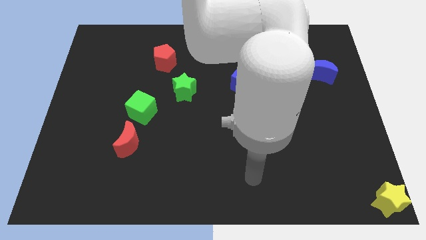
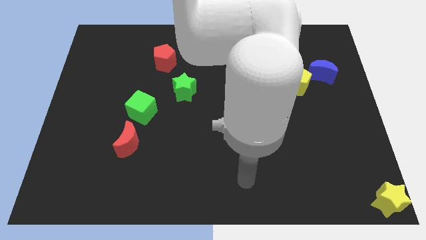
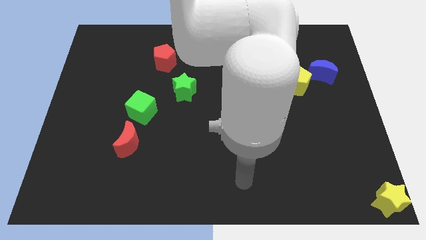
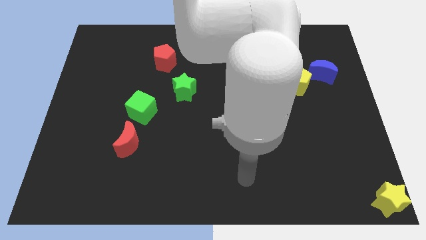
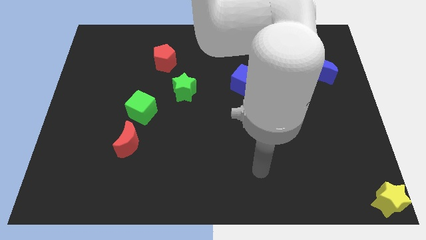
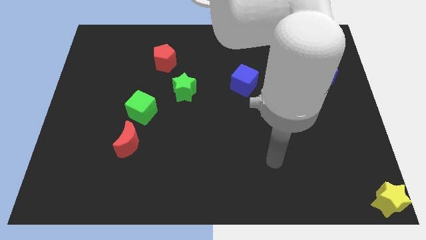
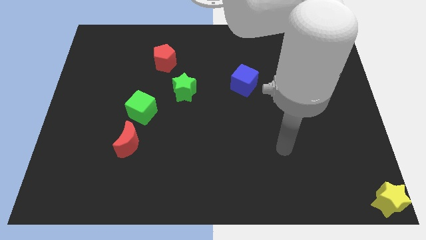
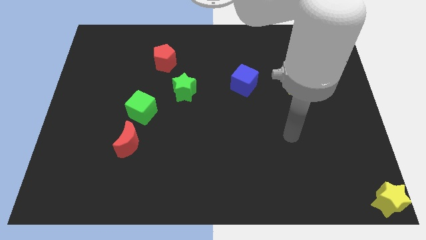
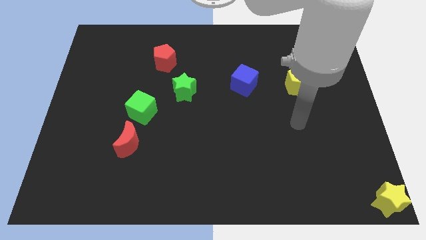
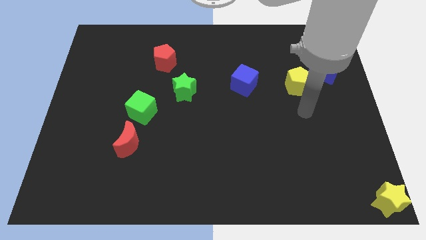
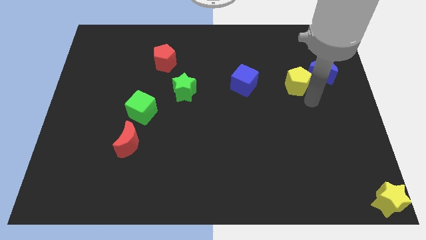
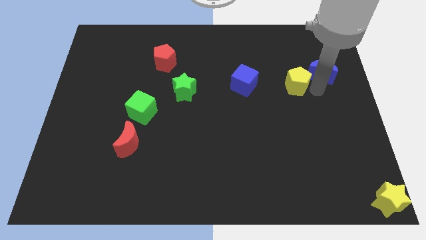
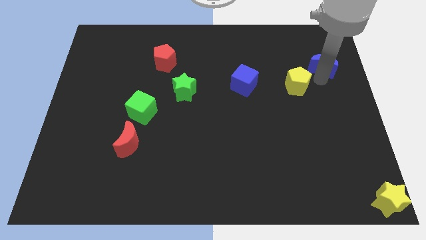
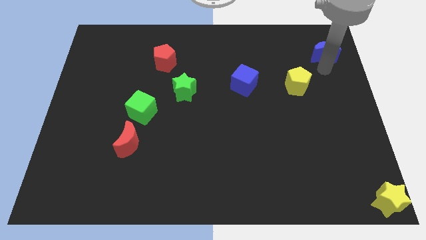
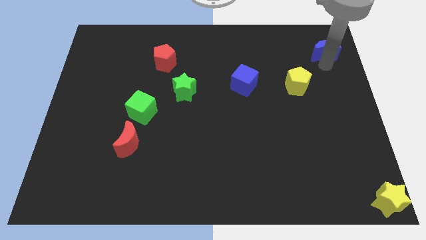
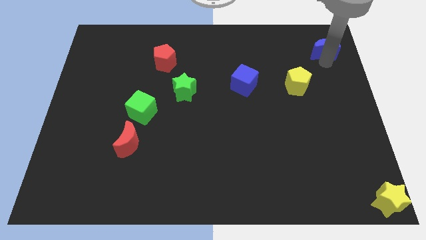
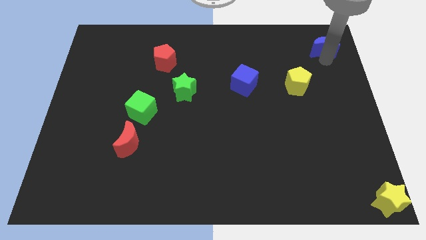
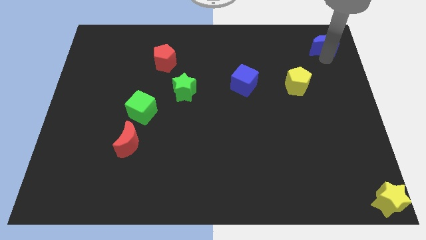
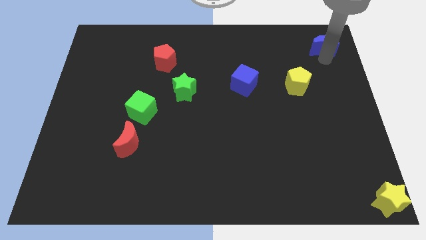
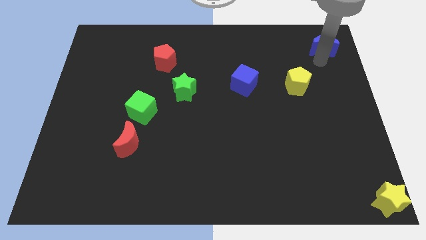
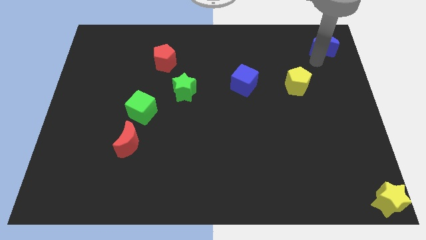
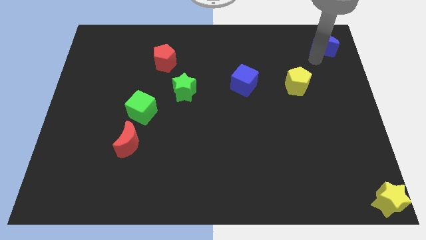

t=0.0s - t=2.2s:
slightly push the blue crescent towards the top right corner of the board

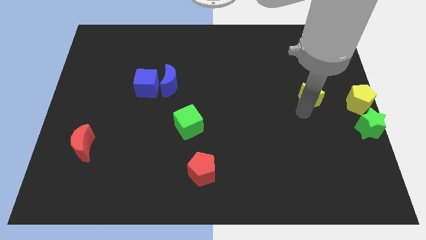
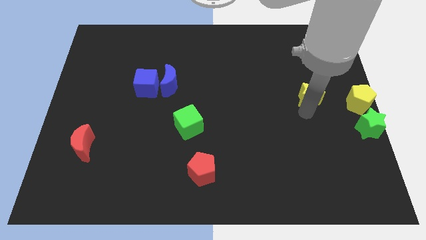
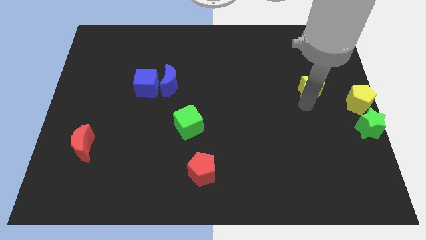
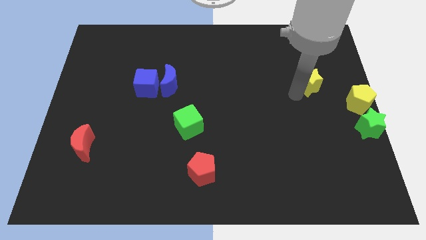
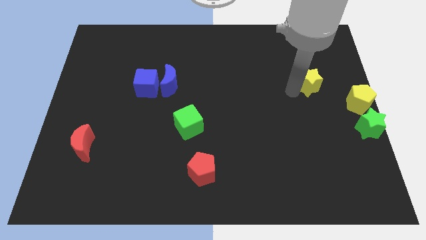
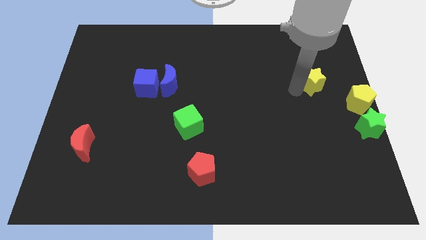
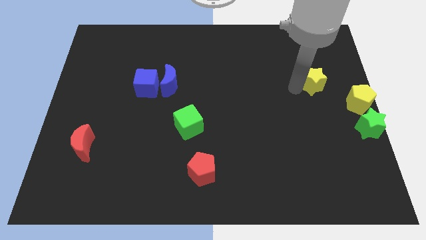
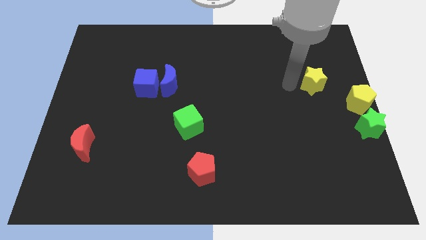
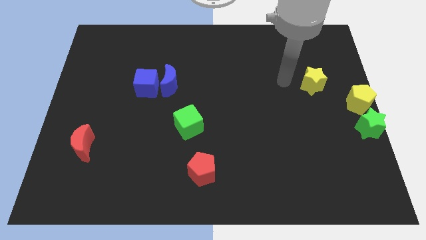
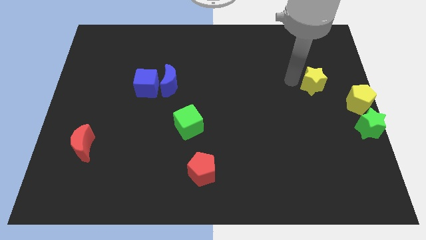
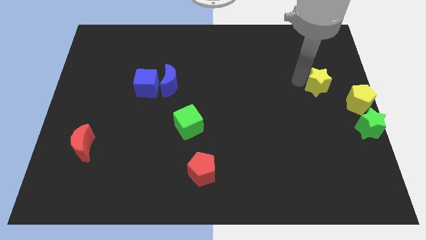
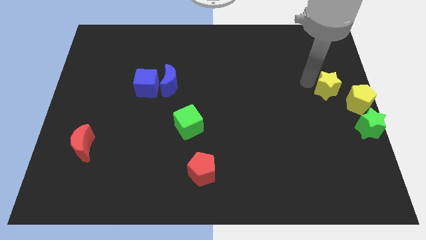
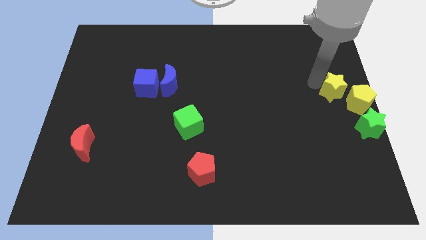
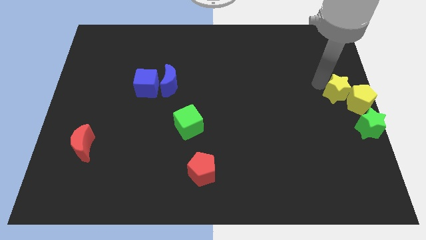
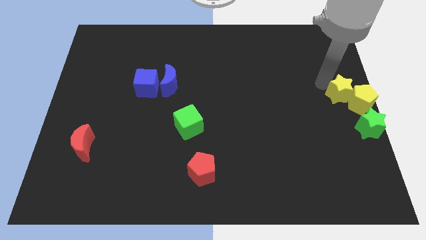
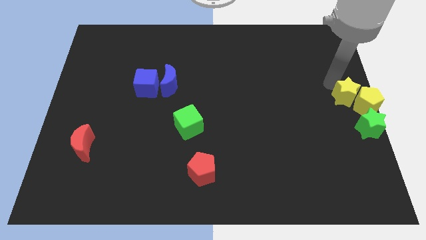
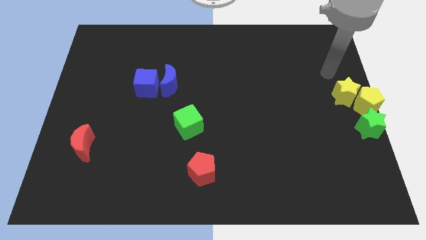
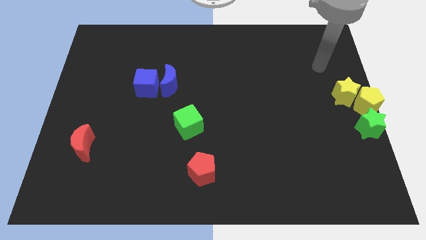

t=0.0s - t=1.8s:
push yellow star into yellow pentagon

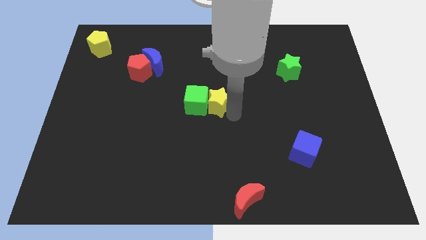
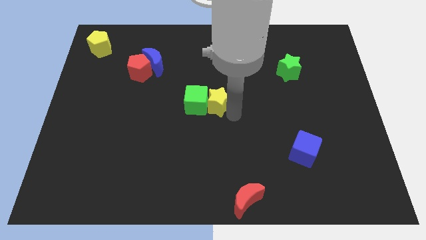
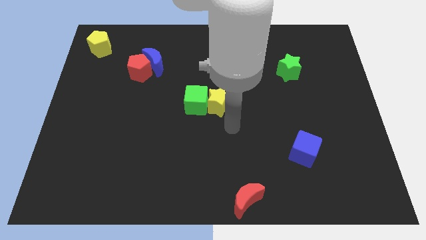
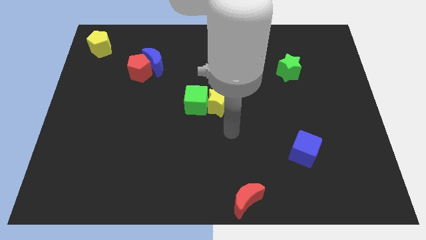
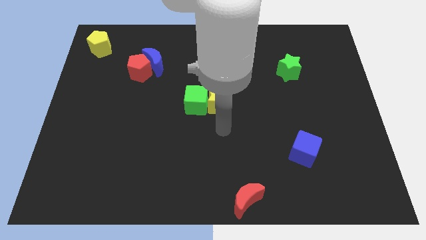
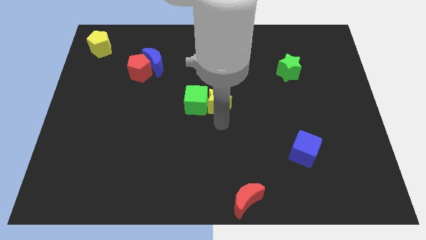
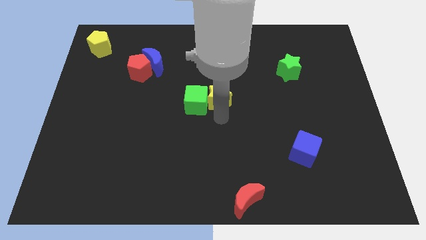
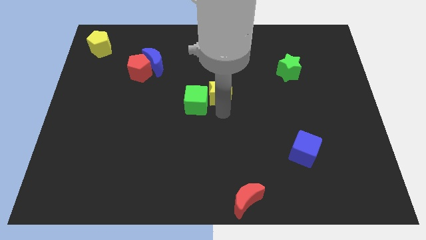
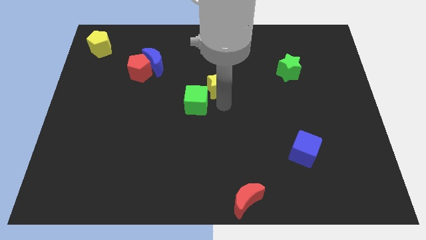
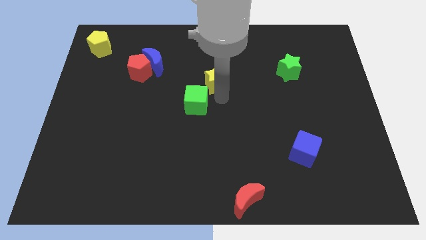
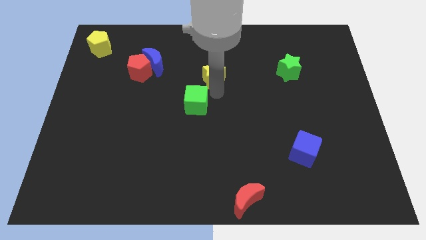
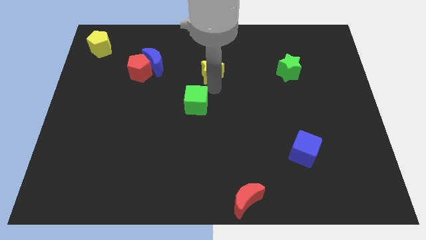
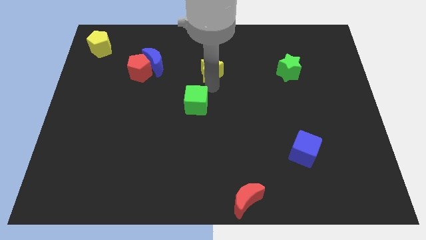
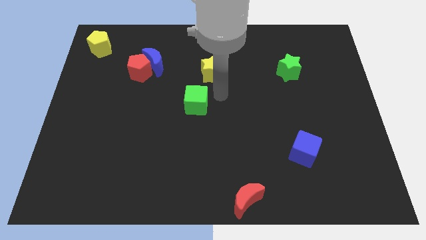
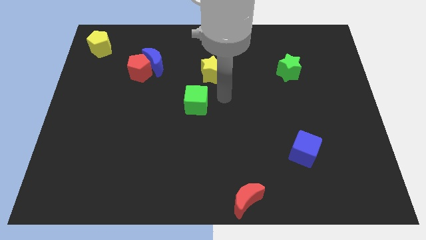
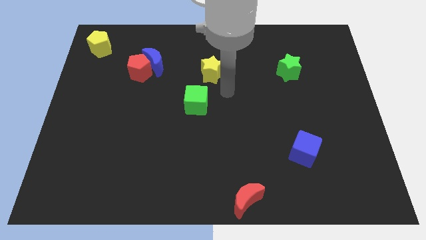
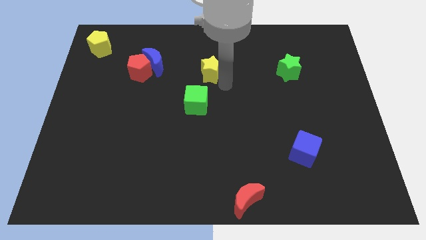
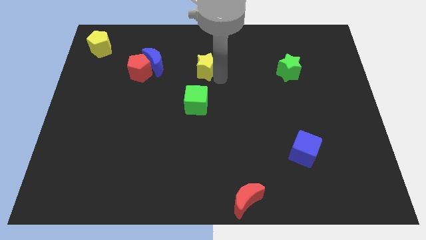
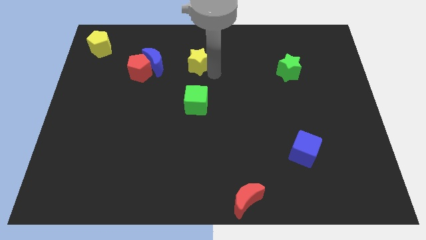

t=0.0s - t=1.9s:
put yellow star above the green cube

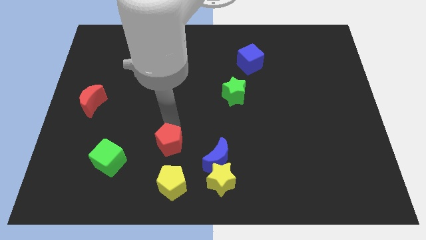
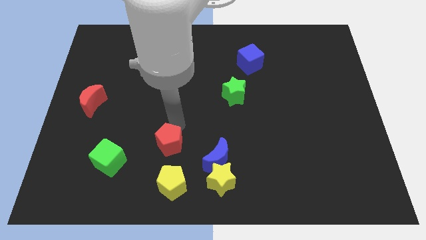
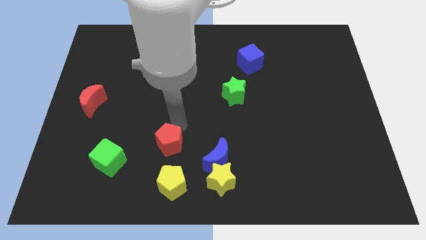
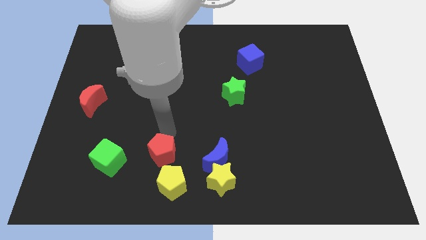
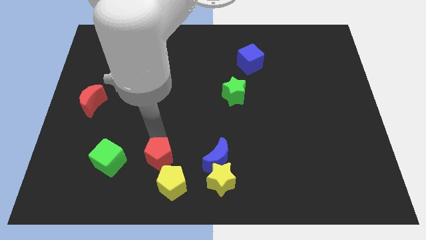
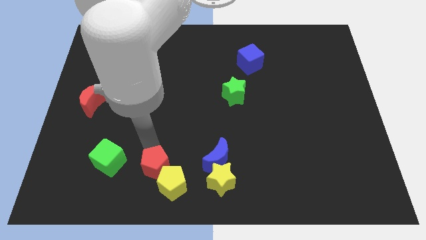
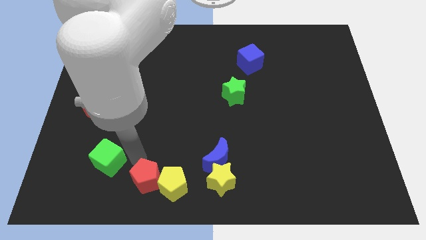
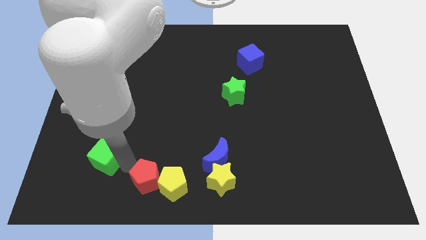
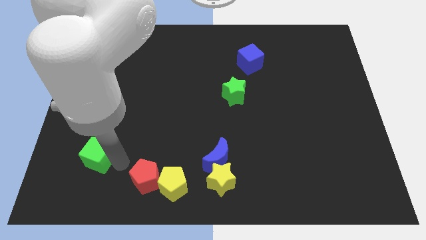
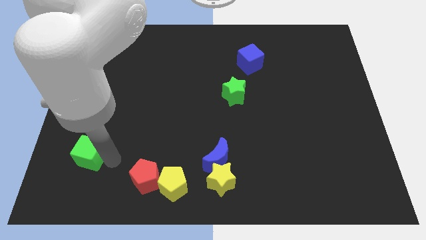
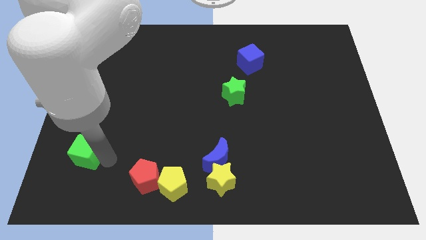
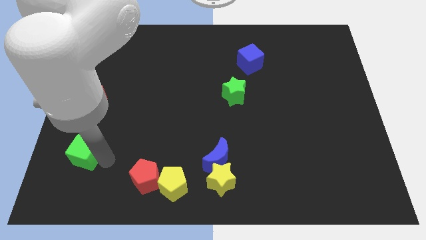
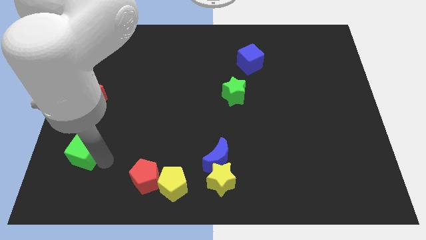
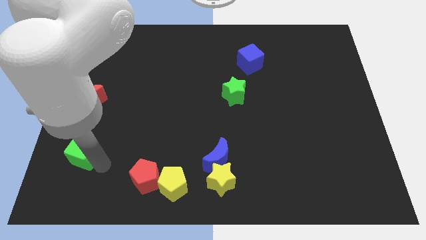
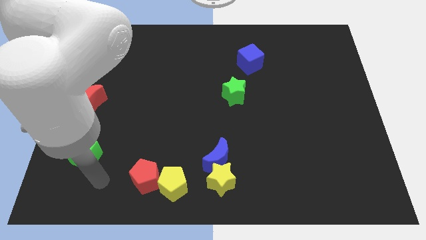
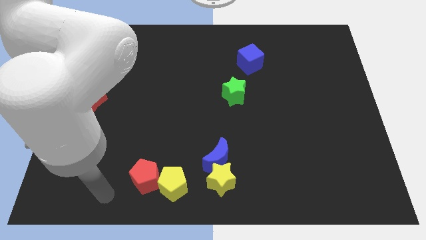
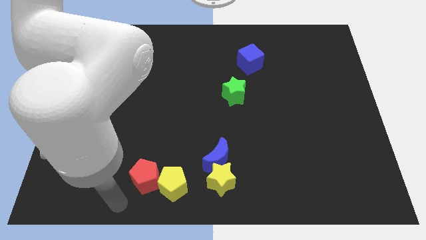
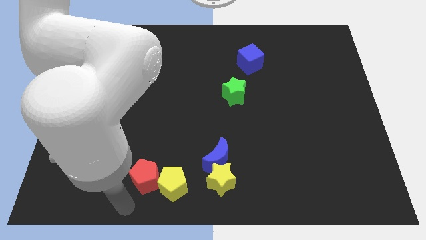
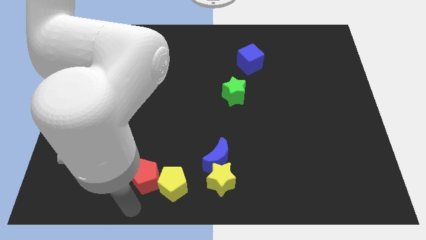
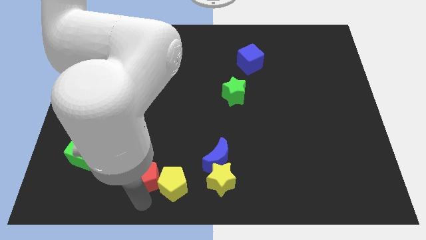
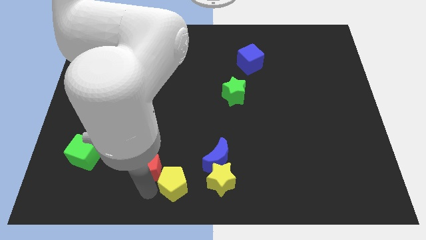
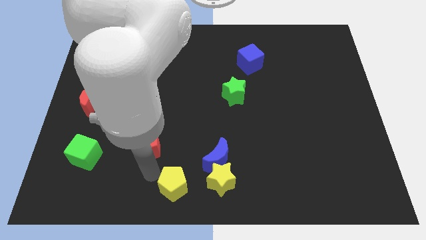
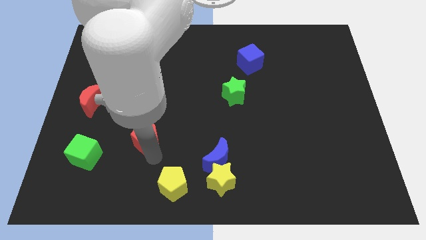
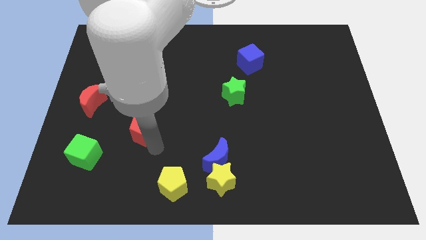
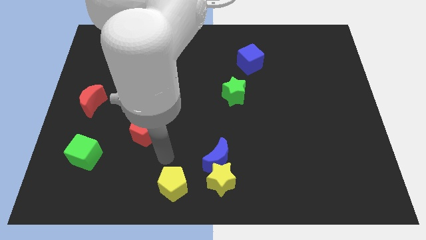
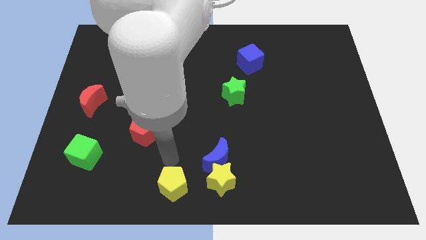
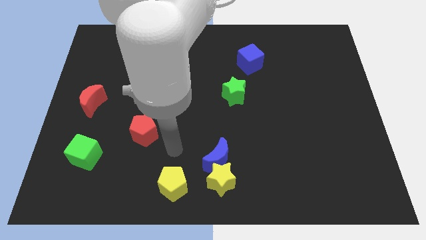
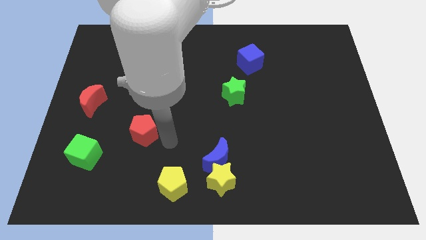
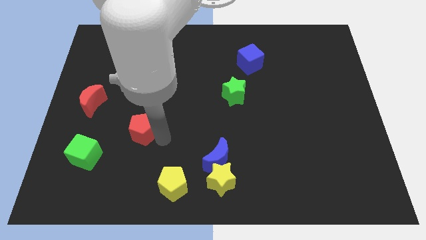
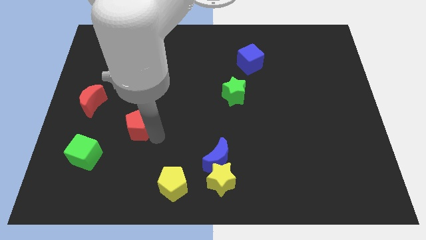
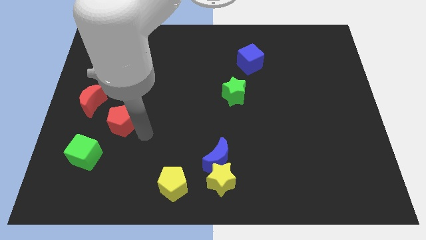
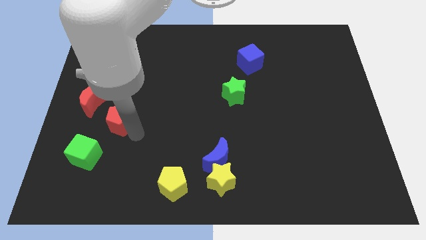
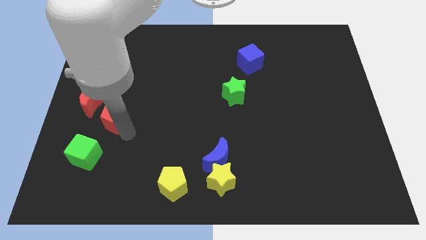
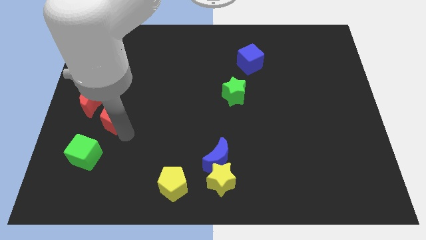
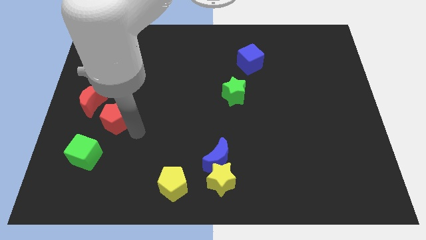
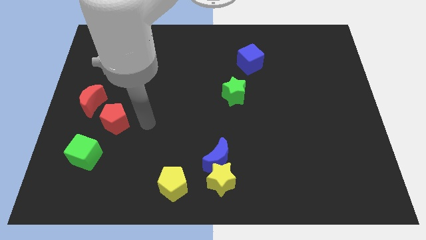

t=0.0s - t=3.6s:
place red pentagon to the right side of red crescent
